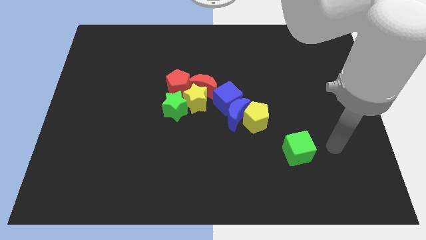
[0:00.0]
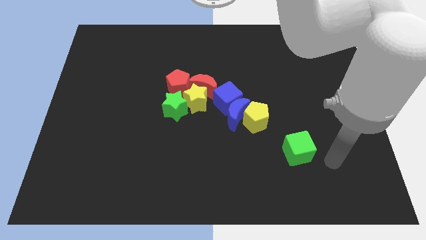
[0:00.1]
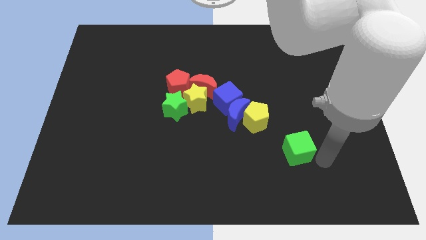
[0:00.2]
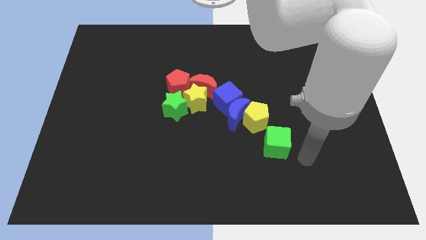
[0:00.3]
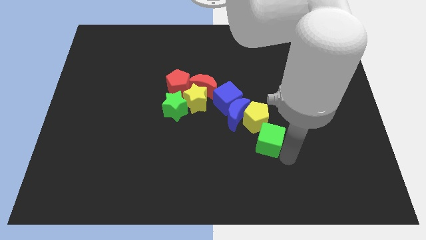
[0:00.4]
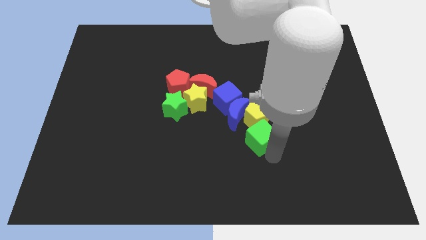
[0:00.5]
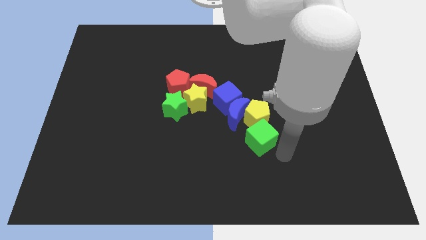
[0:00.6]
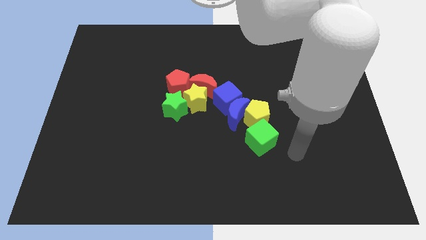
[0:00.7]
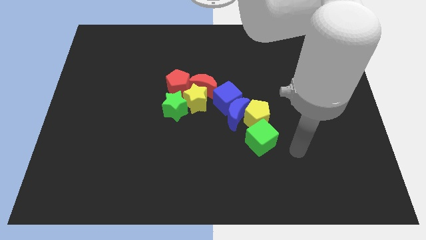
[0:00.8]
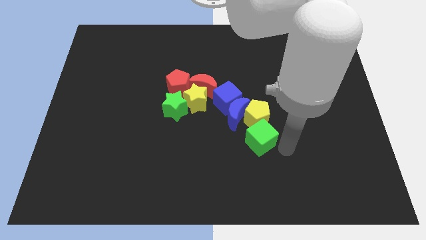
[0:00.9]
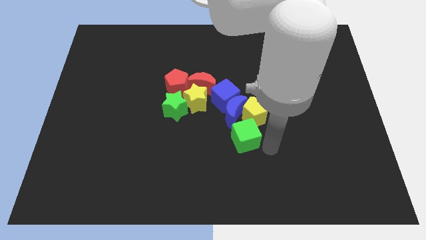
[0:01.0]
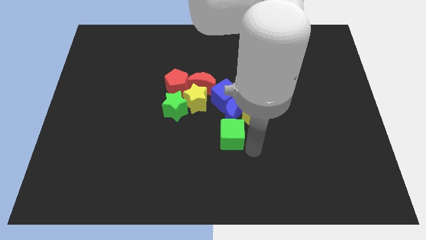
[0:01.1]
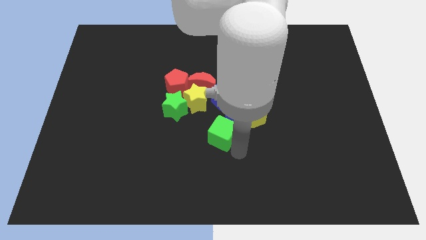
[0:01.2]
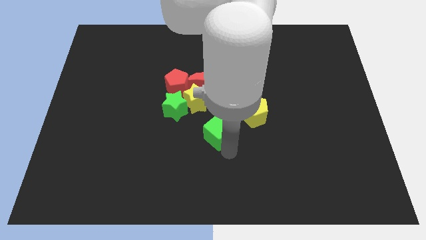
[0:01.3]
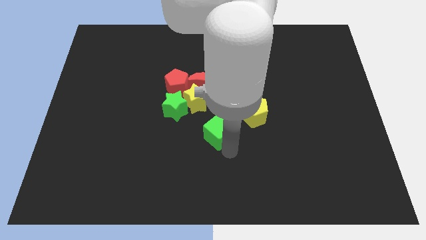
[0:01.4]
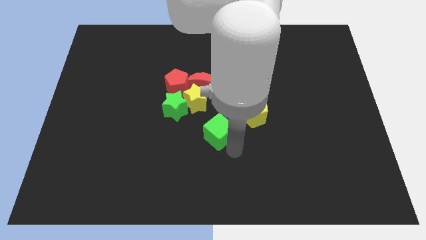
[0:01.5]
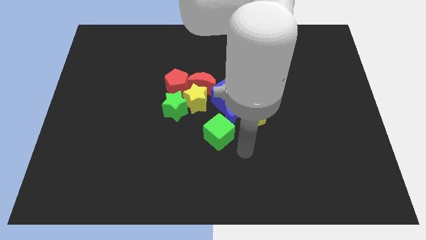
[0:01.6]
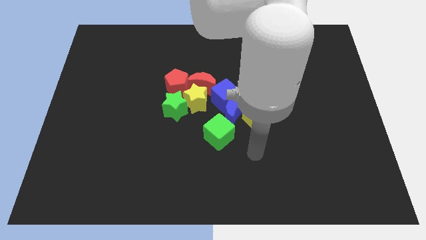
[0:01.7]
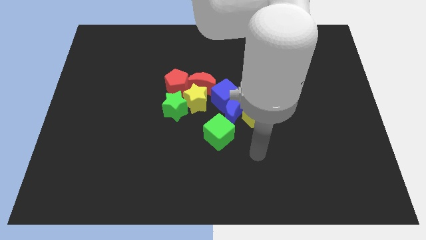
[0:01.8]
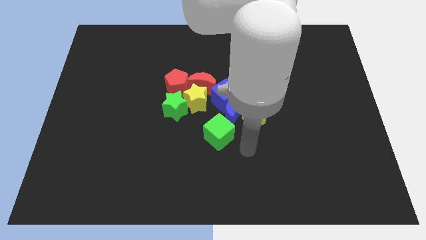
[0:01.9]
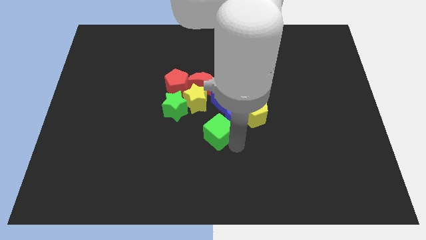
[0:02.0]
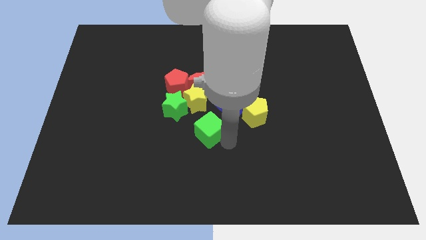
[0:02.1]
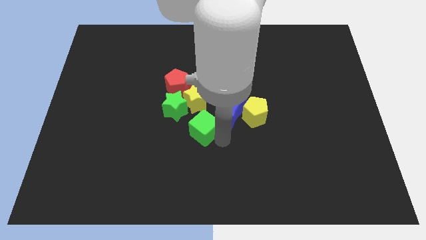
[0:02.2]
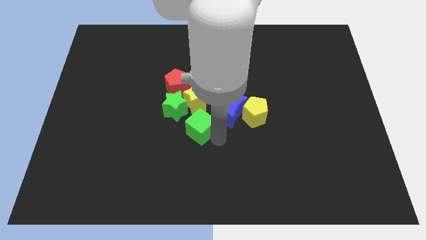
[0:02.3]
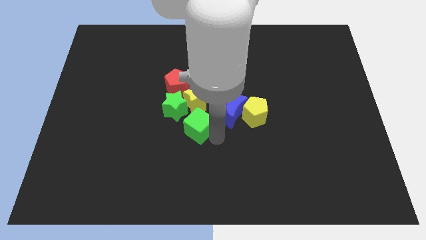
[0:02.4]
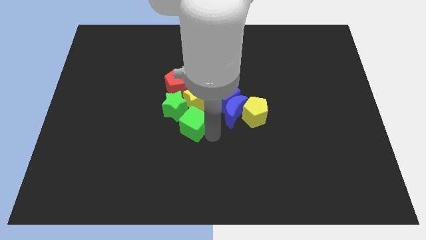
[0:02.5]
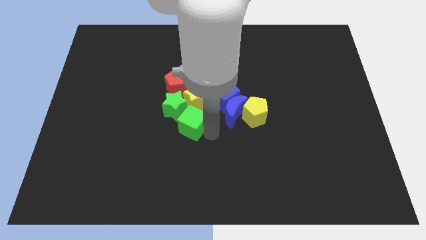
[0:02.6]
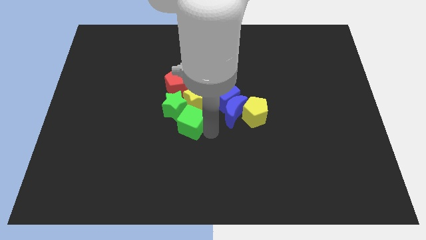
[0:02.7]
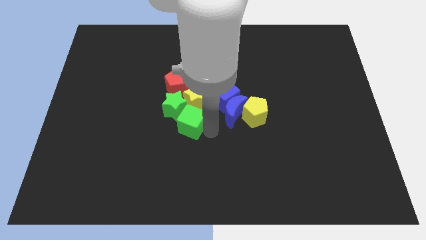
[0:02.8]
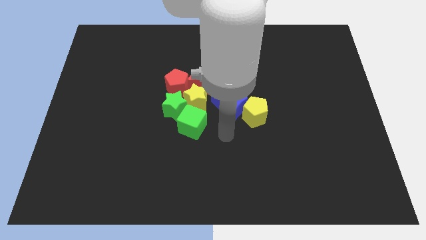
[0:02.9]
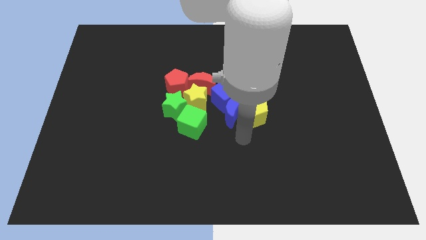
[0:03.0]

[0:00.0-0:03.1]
push green cube towards green star

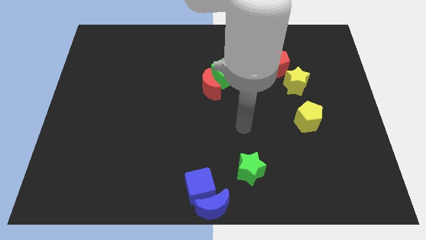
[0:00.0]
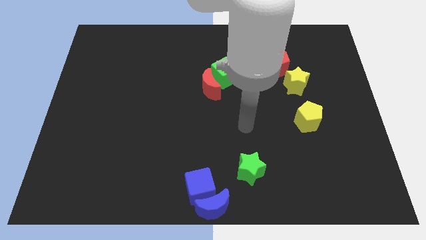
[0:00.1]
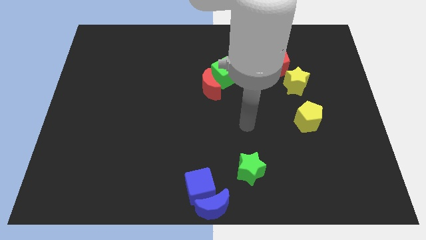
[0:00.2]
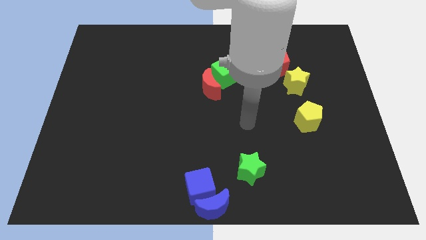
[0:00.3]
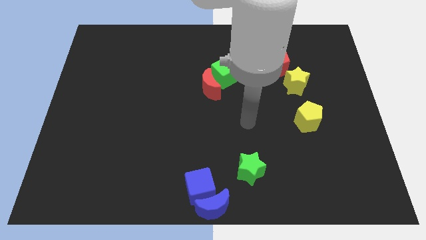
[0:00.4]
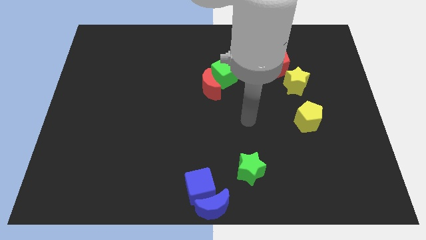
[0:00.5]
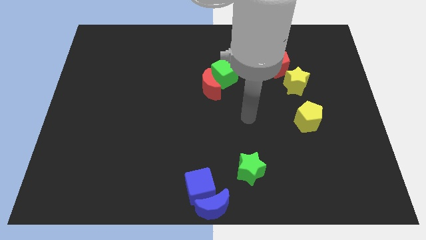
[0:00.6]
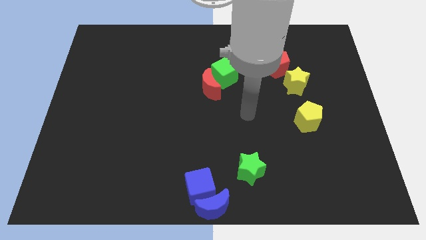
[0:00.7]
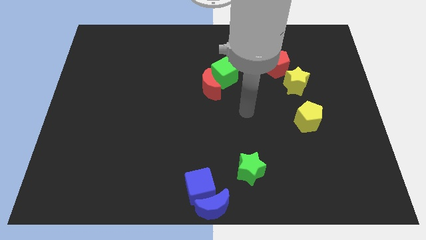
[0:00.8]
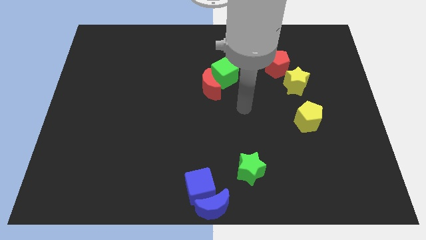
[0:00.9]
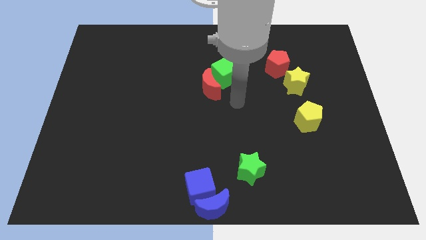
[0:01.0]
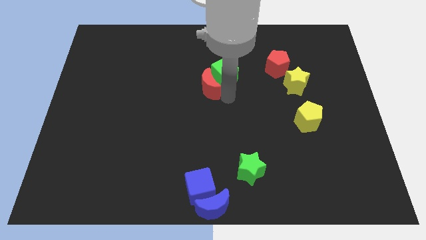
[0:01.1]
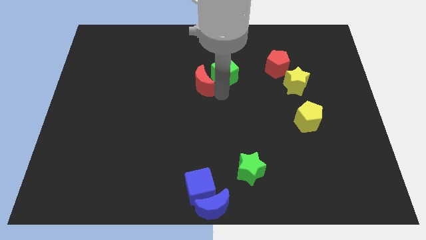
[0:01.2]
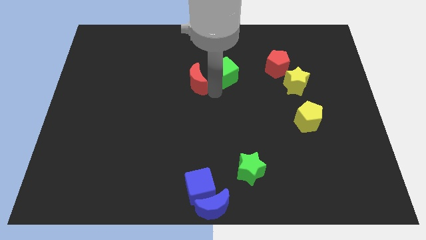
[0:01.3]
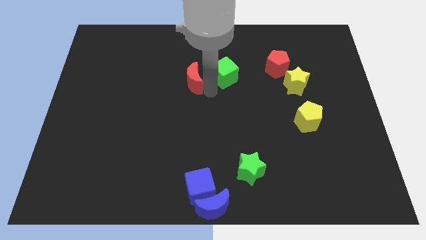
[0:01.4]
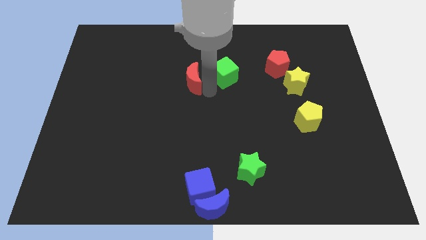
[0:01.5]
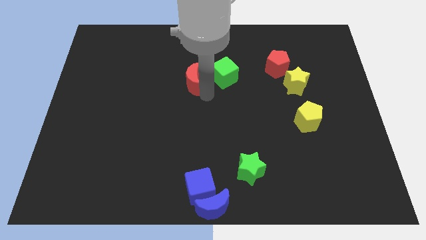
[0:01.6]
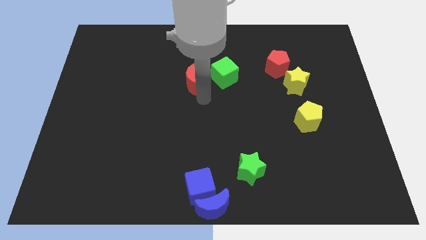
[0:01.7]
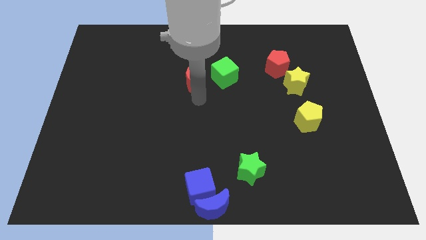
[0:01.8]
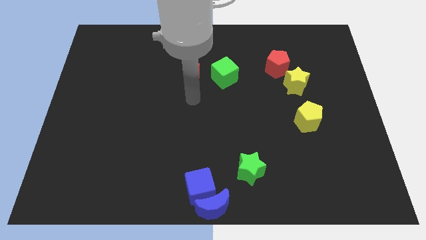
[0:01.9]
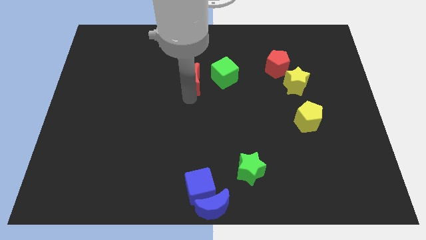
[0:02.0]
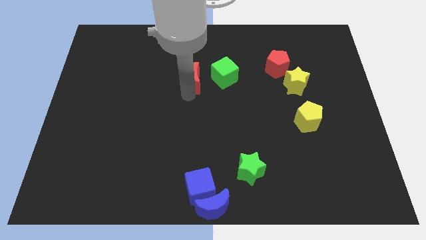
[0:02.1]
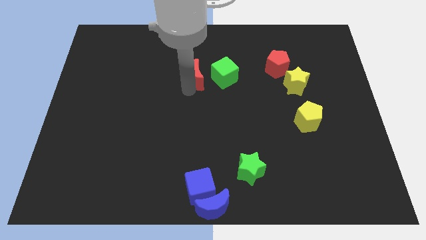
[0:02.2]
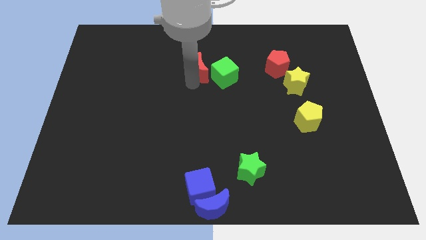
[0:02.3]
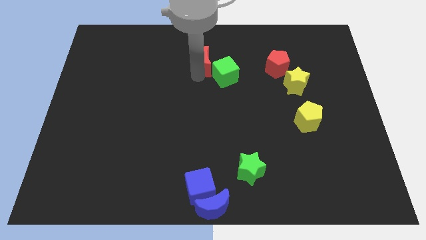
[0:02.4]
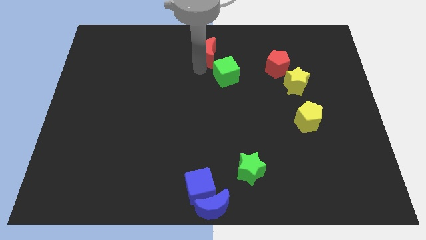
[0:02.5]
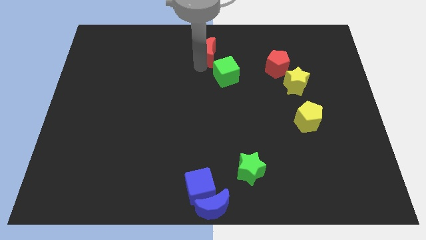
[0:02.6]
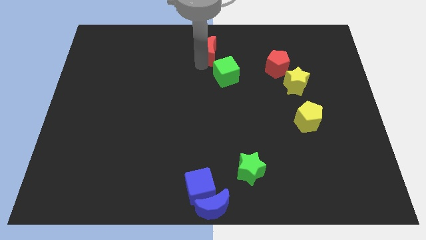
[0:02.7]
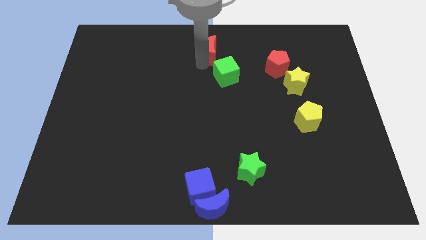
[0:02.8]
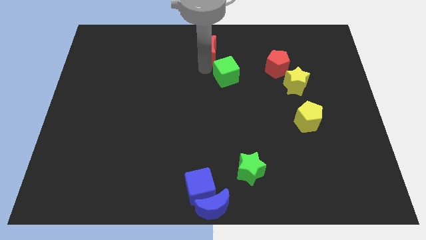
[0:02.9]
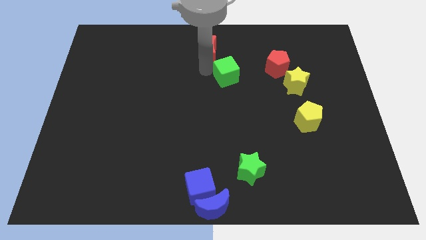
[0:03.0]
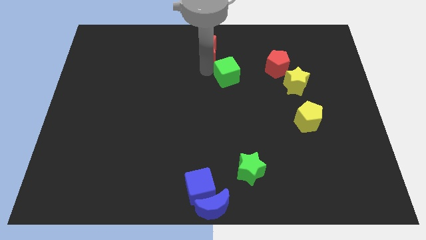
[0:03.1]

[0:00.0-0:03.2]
push the red moon towards up

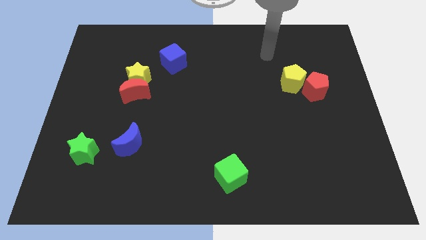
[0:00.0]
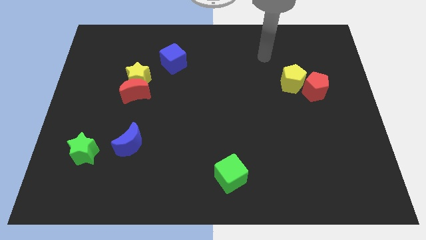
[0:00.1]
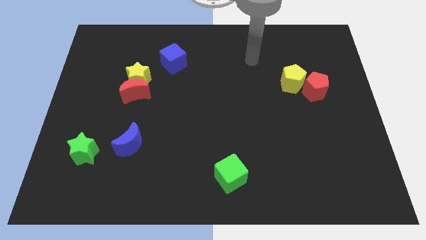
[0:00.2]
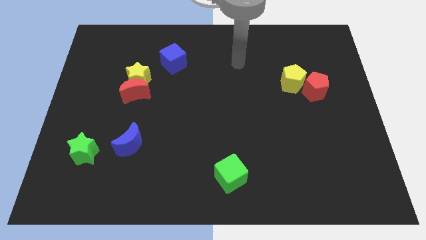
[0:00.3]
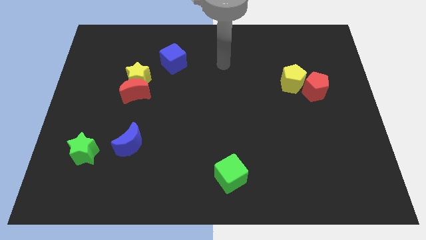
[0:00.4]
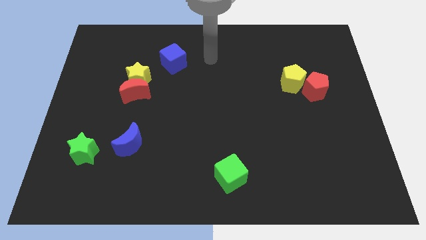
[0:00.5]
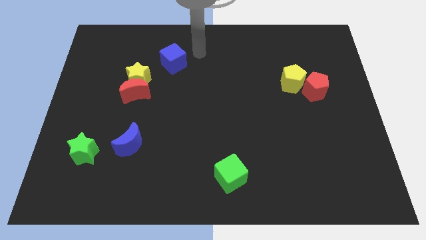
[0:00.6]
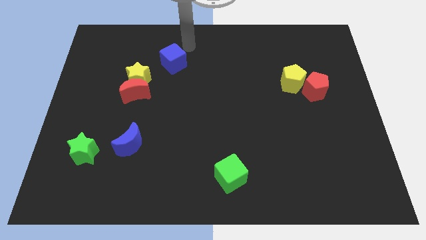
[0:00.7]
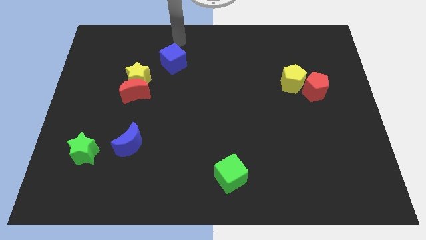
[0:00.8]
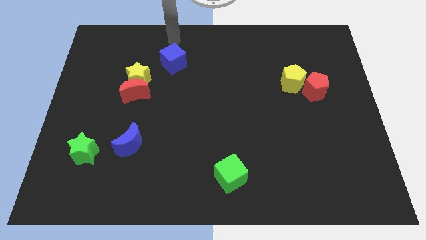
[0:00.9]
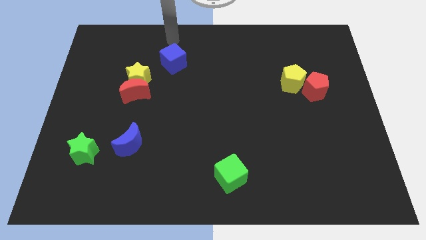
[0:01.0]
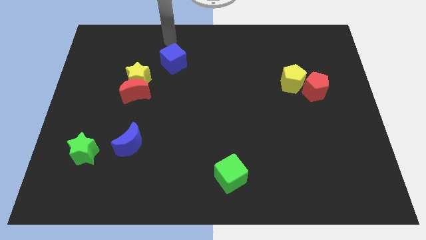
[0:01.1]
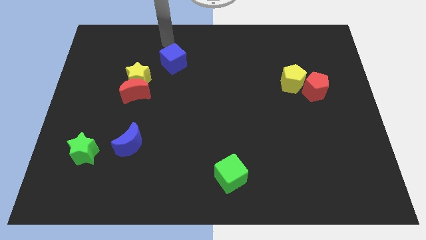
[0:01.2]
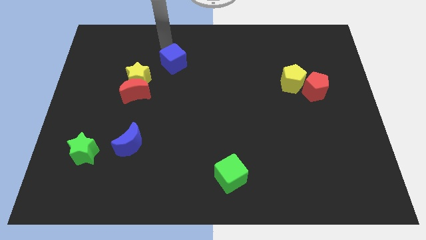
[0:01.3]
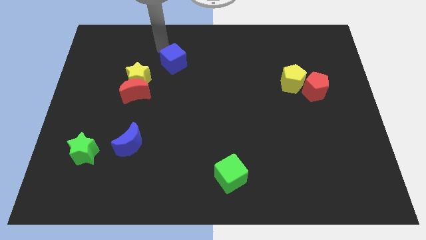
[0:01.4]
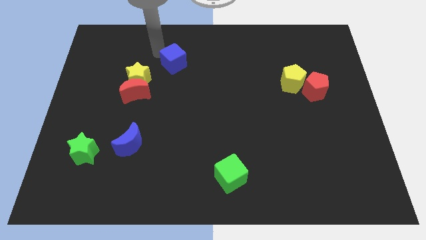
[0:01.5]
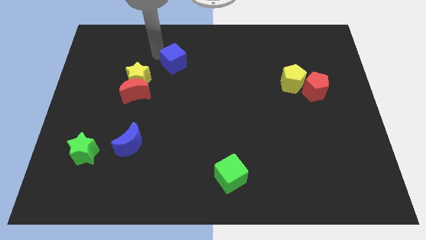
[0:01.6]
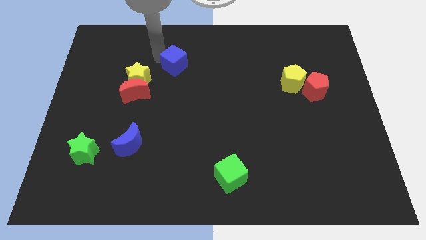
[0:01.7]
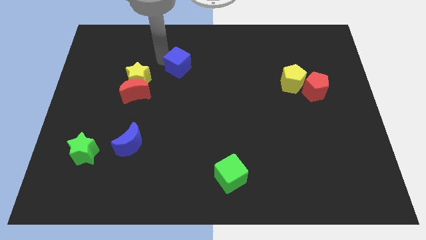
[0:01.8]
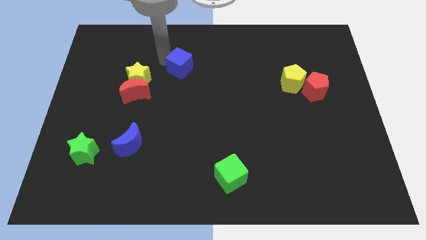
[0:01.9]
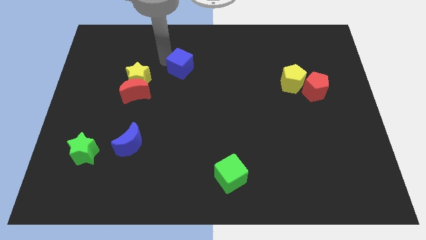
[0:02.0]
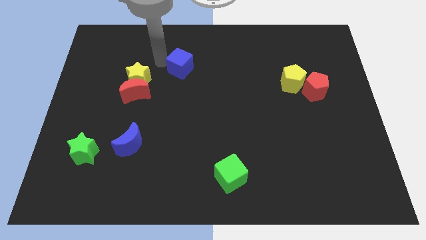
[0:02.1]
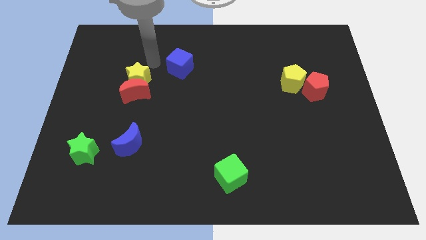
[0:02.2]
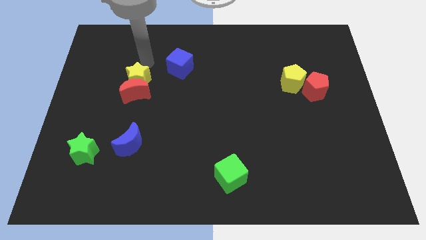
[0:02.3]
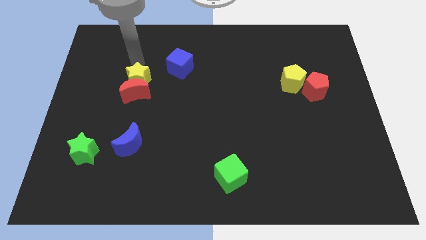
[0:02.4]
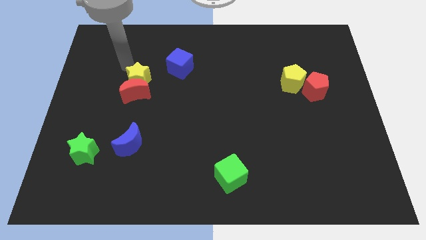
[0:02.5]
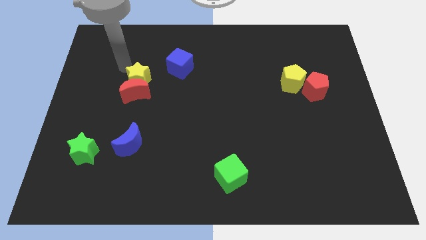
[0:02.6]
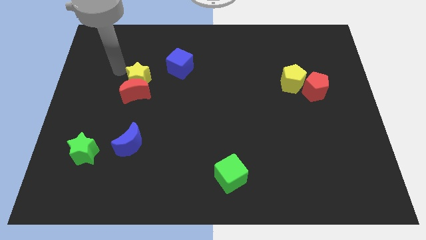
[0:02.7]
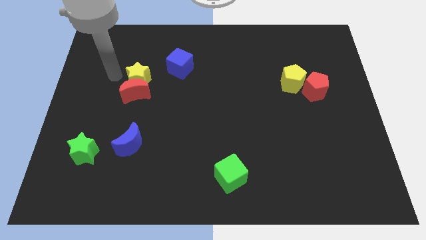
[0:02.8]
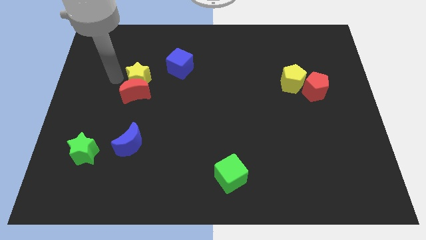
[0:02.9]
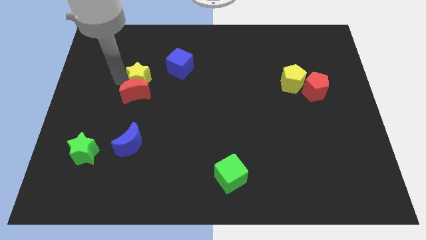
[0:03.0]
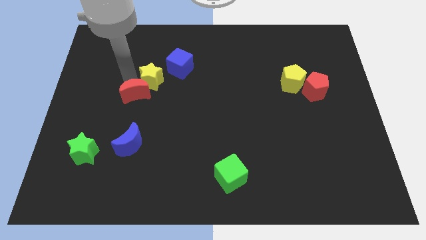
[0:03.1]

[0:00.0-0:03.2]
slide the blue cube and the yellow star slightly to the right
